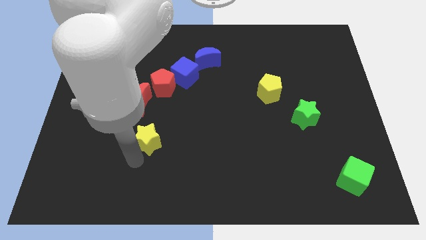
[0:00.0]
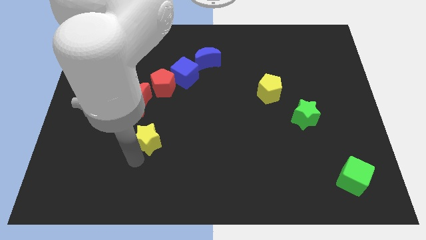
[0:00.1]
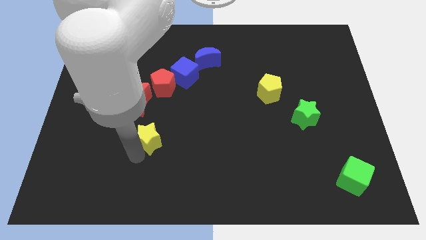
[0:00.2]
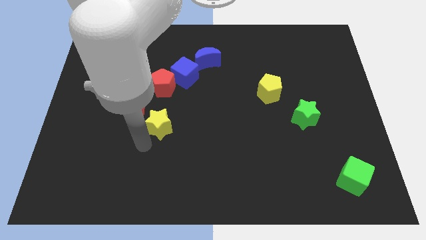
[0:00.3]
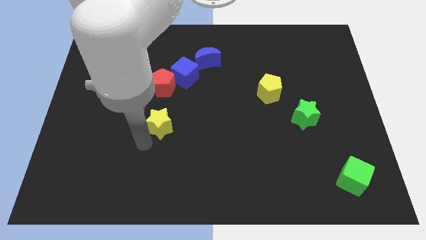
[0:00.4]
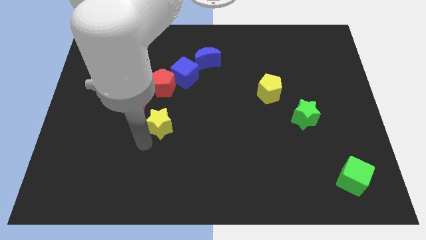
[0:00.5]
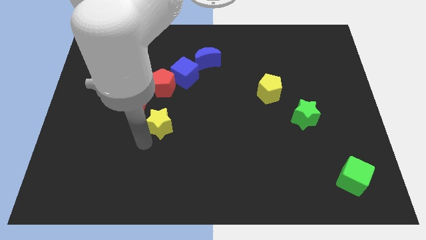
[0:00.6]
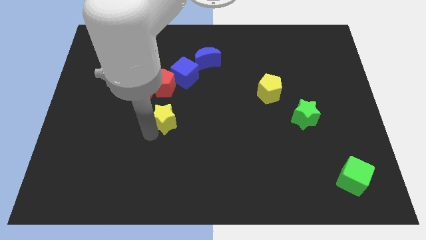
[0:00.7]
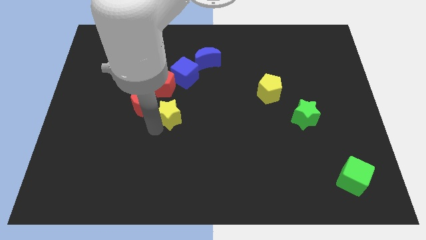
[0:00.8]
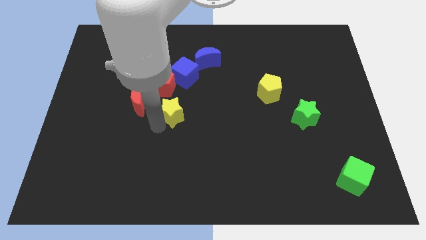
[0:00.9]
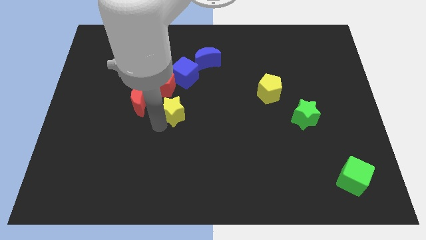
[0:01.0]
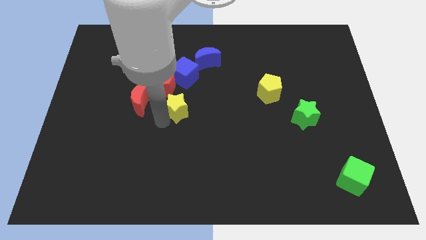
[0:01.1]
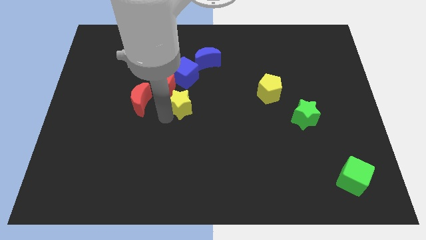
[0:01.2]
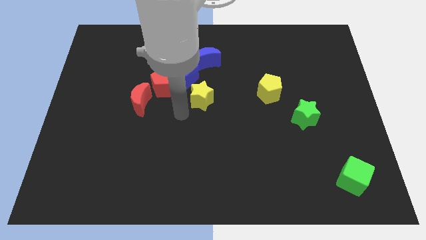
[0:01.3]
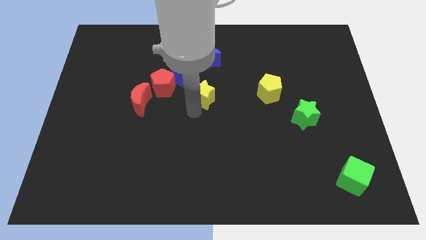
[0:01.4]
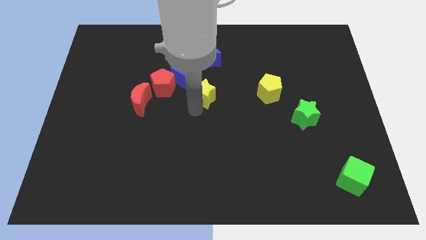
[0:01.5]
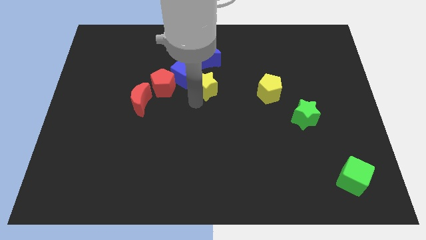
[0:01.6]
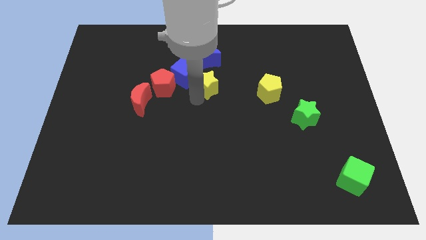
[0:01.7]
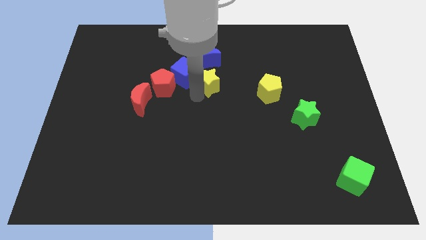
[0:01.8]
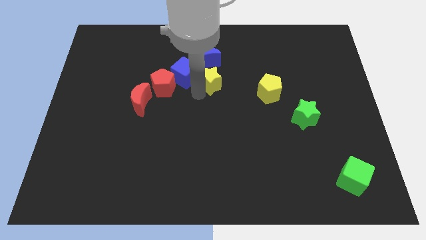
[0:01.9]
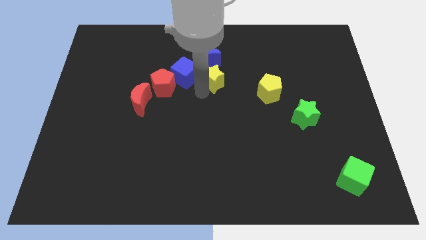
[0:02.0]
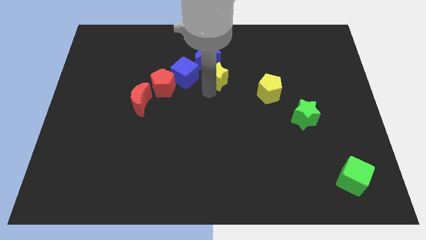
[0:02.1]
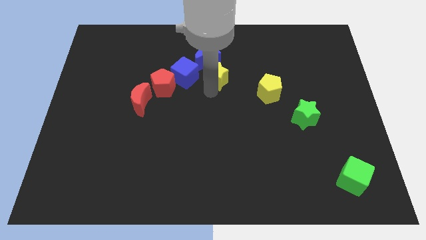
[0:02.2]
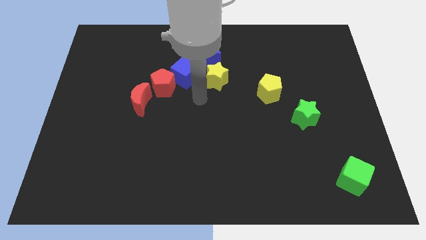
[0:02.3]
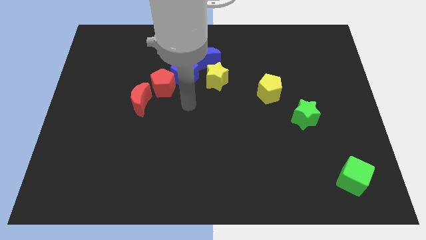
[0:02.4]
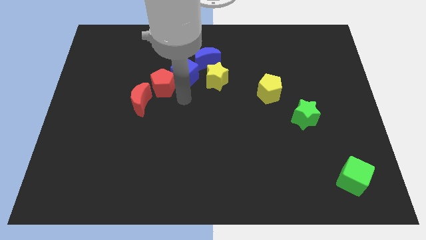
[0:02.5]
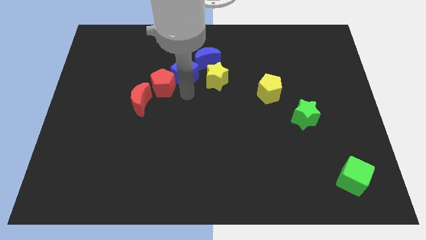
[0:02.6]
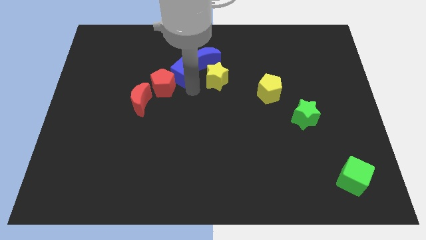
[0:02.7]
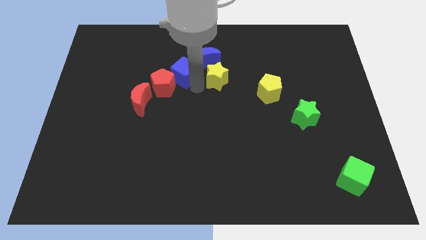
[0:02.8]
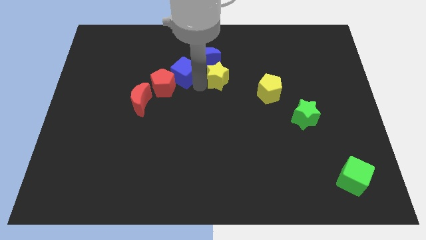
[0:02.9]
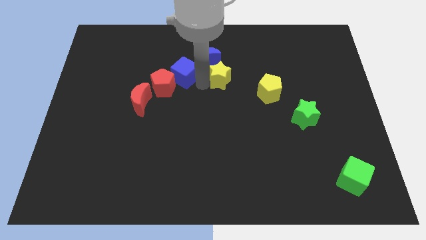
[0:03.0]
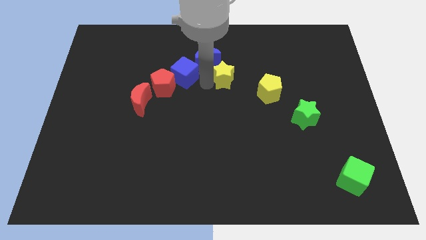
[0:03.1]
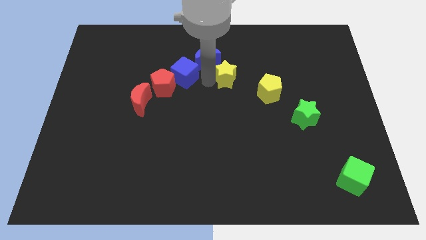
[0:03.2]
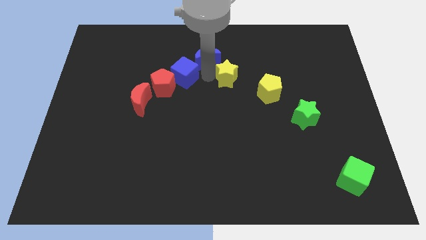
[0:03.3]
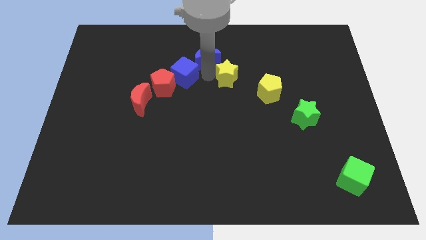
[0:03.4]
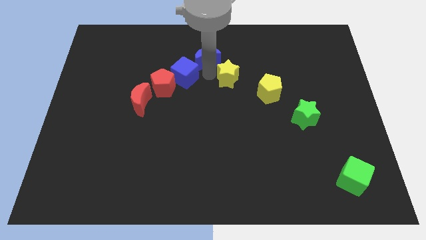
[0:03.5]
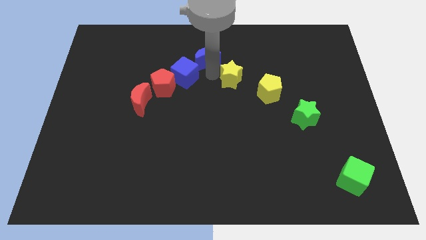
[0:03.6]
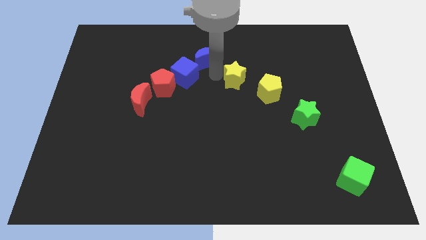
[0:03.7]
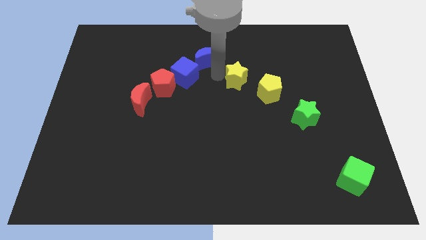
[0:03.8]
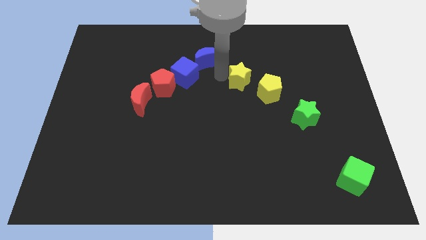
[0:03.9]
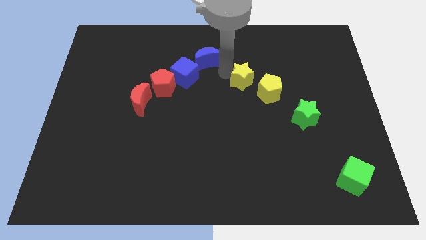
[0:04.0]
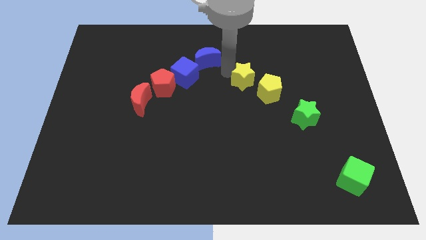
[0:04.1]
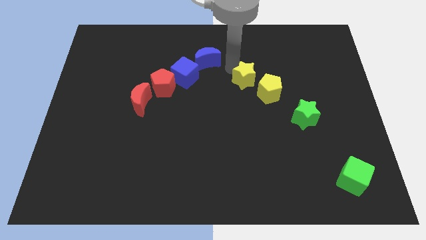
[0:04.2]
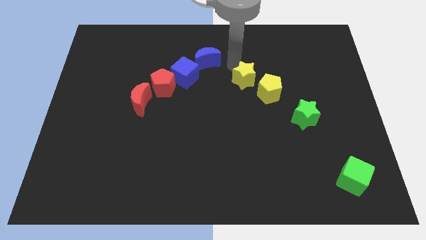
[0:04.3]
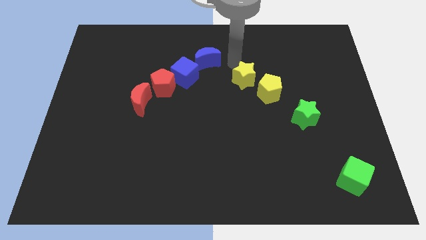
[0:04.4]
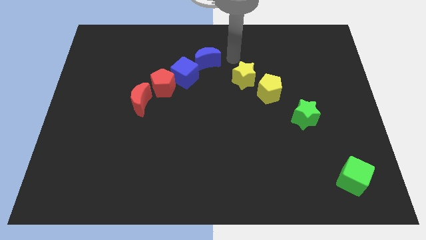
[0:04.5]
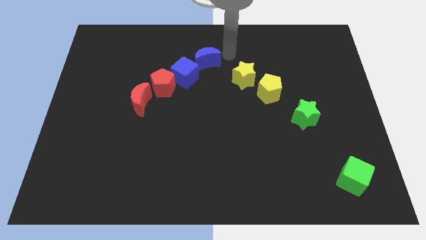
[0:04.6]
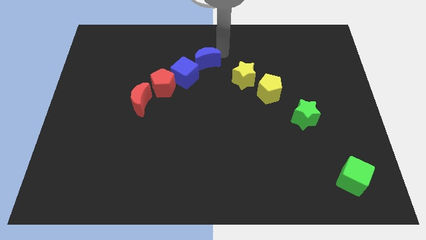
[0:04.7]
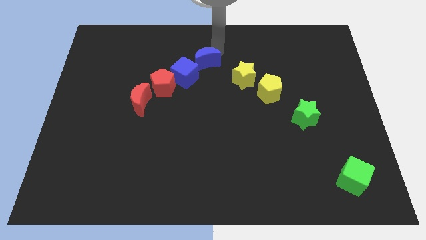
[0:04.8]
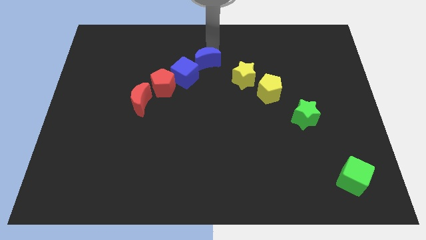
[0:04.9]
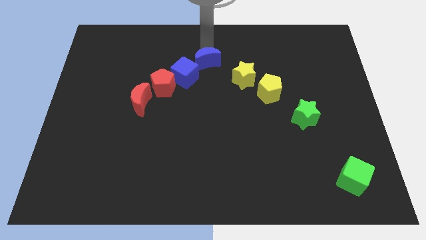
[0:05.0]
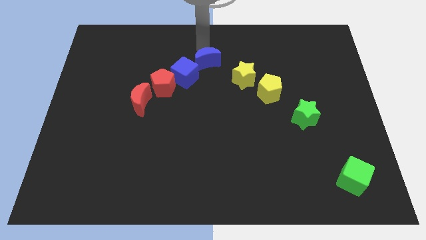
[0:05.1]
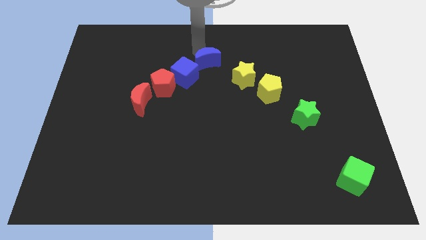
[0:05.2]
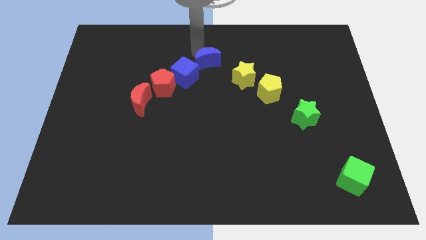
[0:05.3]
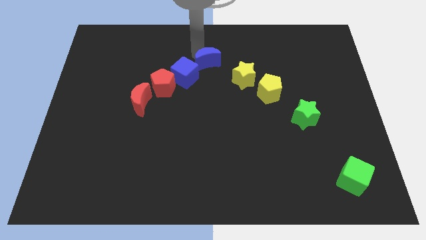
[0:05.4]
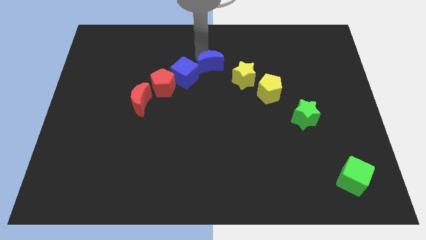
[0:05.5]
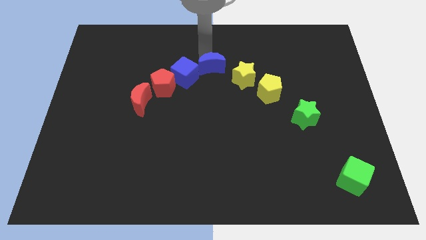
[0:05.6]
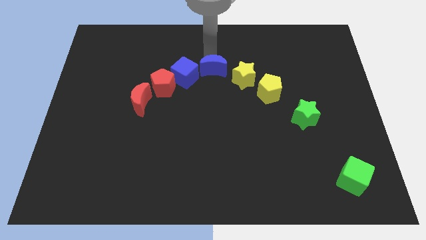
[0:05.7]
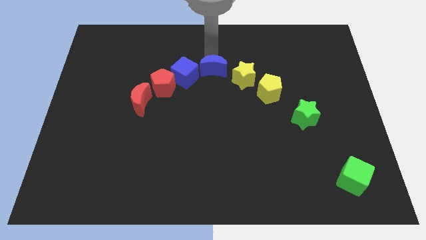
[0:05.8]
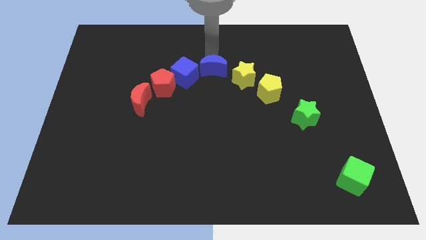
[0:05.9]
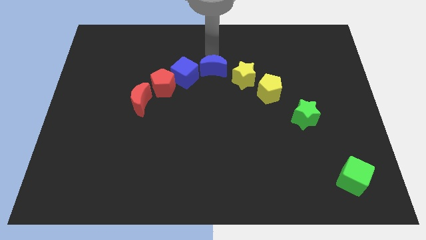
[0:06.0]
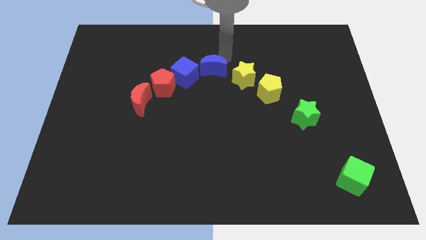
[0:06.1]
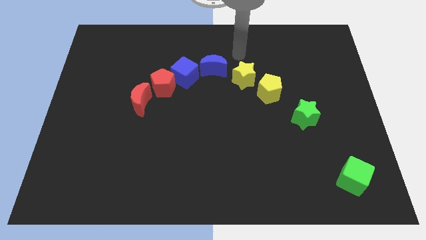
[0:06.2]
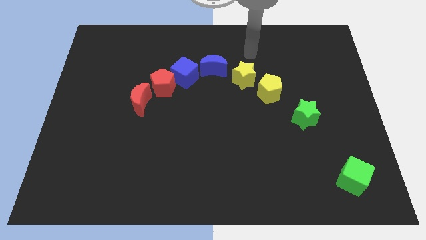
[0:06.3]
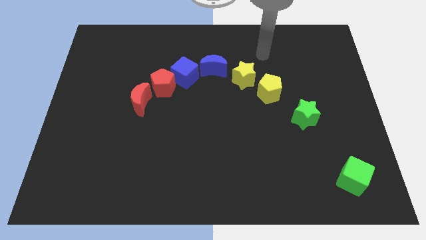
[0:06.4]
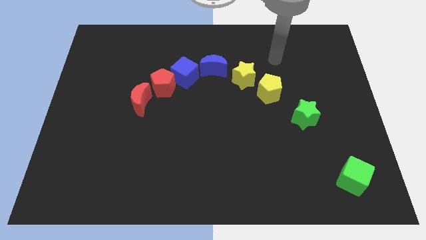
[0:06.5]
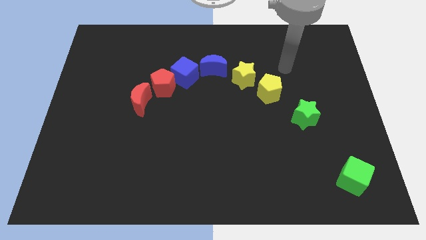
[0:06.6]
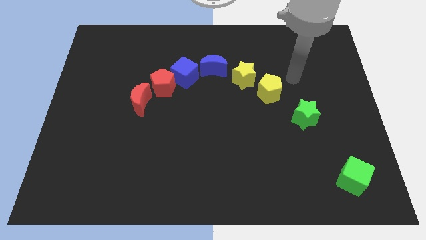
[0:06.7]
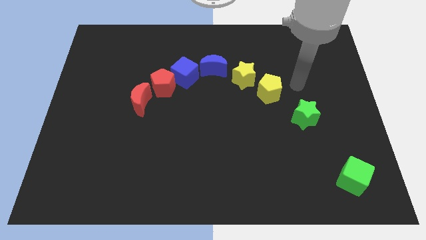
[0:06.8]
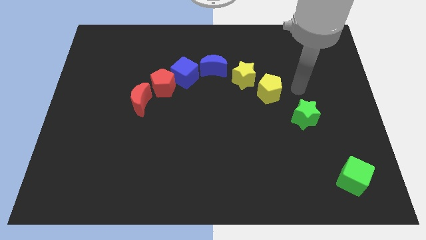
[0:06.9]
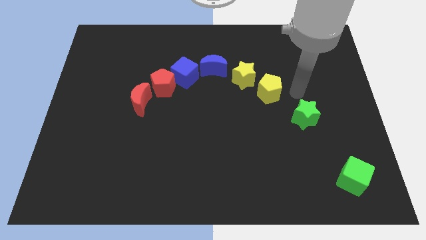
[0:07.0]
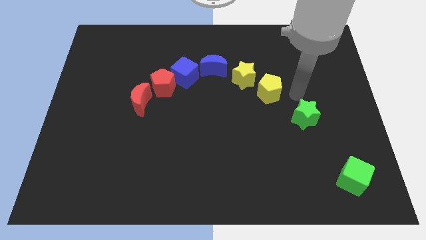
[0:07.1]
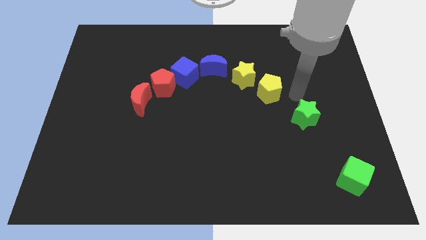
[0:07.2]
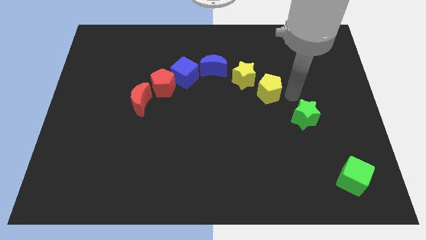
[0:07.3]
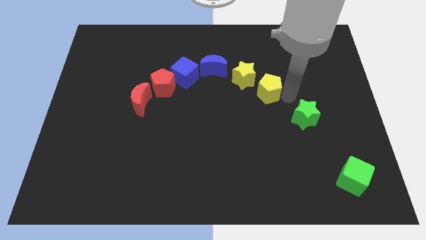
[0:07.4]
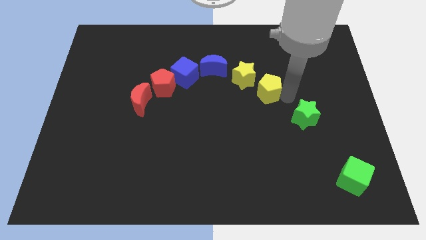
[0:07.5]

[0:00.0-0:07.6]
place the yellow star in between the blue moon and the yellow pentagon

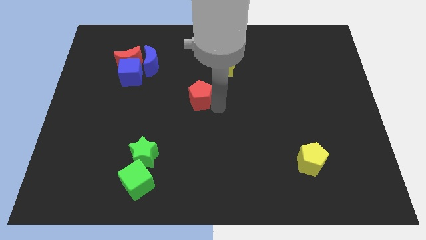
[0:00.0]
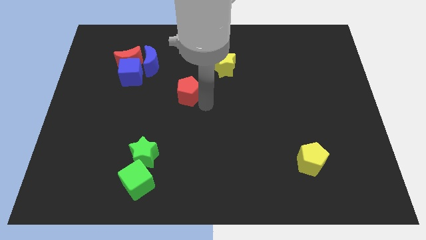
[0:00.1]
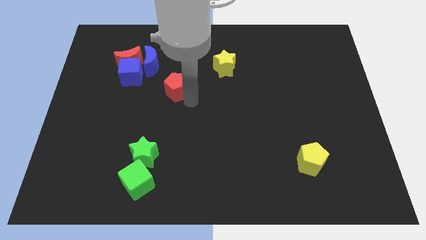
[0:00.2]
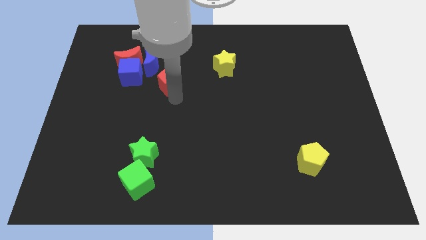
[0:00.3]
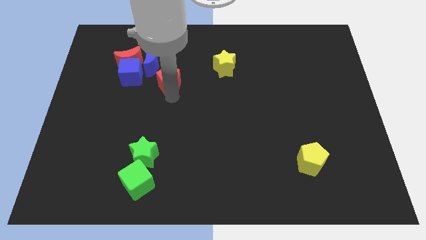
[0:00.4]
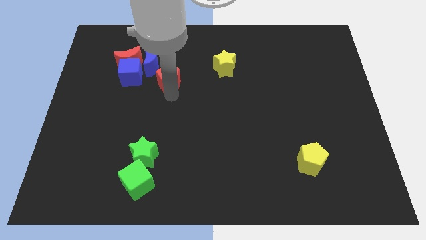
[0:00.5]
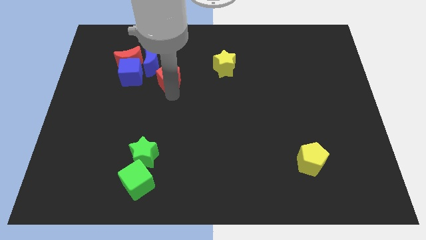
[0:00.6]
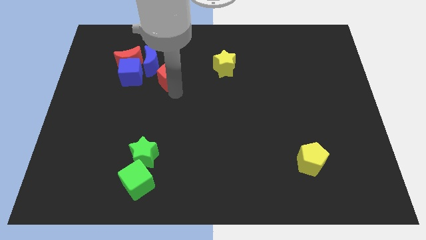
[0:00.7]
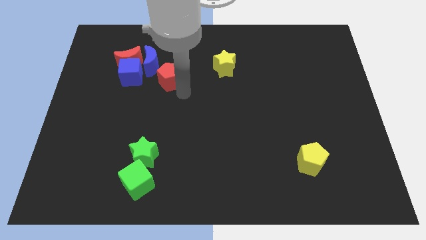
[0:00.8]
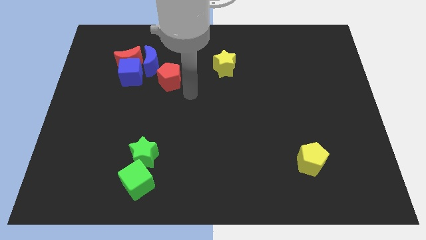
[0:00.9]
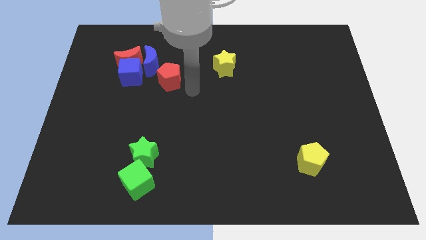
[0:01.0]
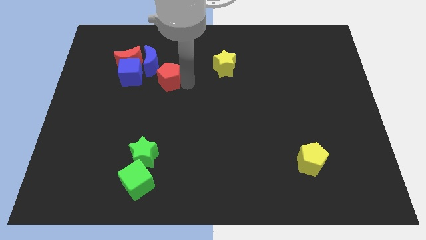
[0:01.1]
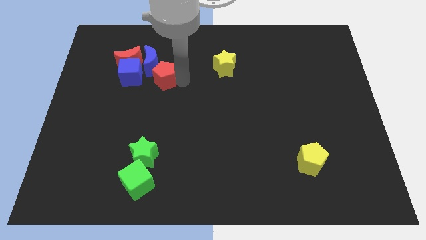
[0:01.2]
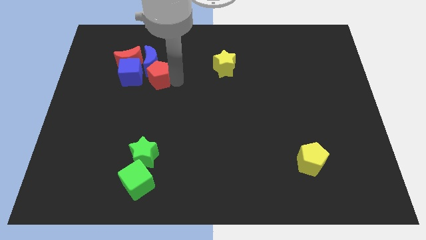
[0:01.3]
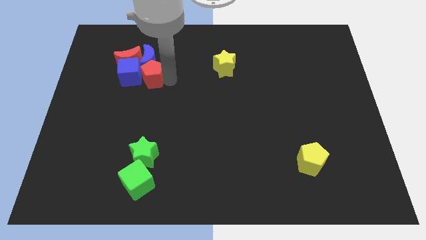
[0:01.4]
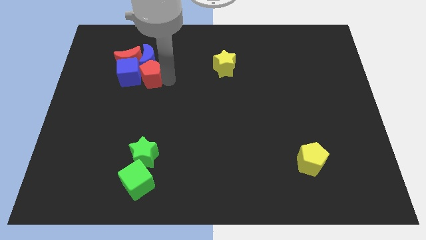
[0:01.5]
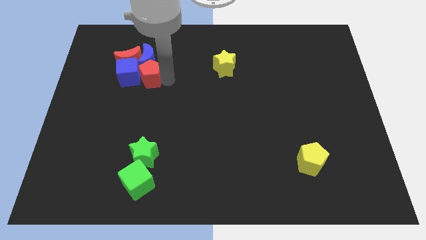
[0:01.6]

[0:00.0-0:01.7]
place red pentagon to the right of blue cube
